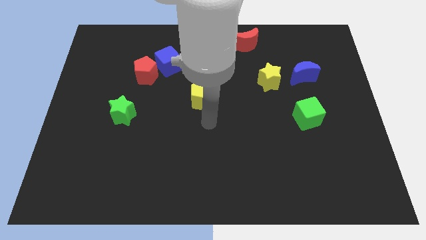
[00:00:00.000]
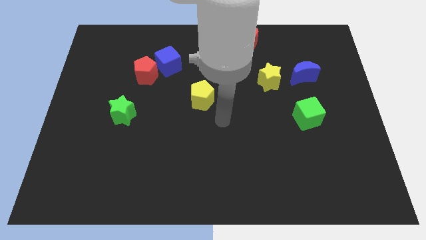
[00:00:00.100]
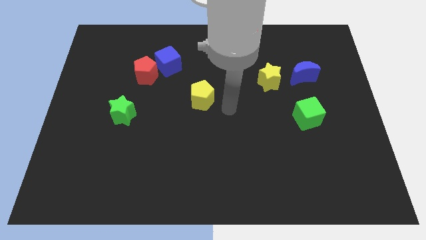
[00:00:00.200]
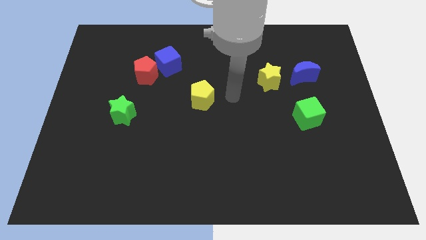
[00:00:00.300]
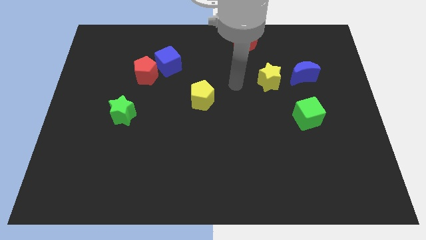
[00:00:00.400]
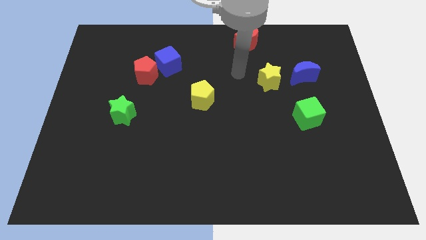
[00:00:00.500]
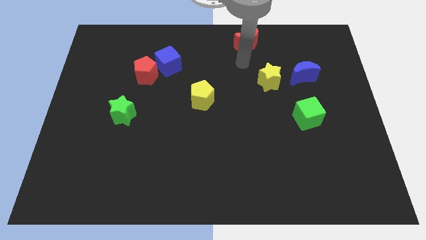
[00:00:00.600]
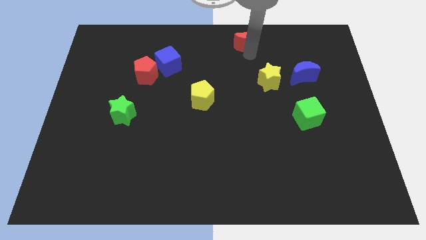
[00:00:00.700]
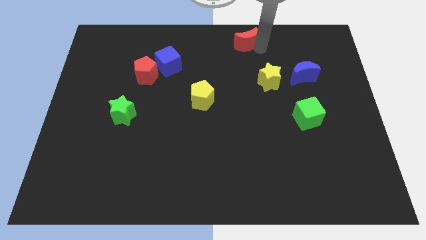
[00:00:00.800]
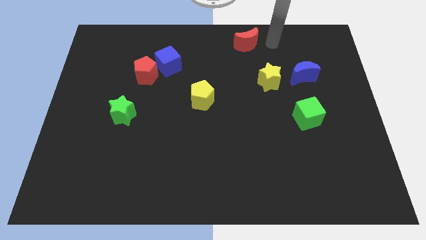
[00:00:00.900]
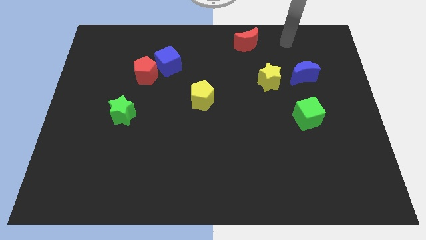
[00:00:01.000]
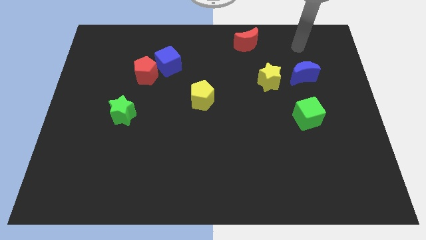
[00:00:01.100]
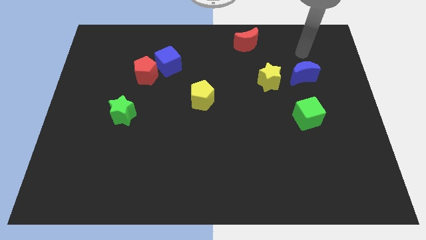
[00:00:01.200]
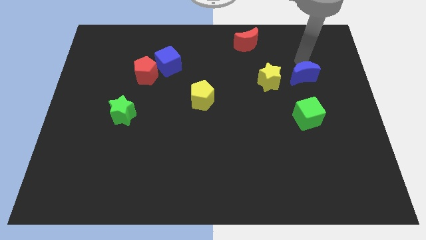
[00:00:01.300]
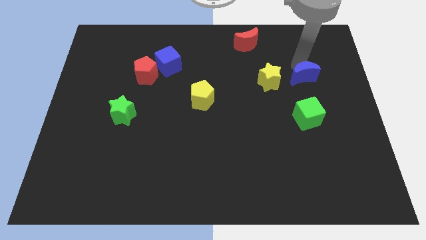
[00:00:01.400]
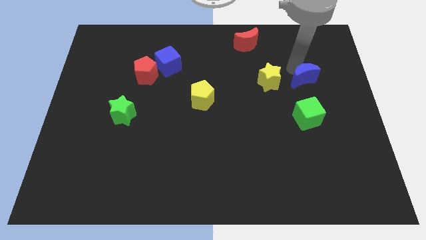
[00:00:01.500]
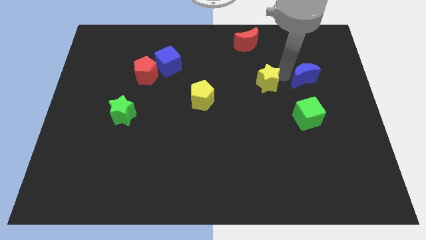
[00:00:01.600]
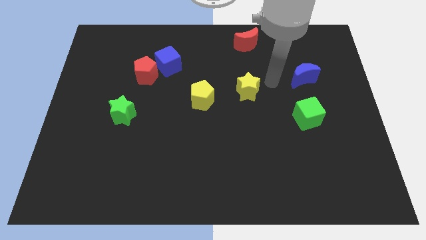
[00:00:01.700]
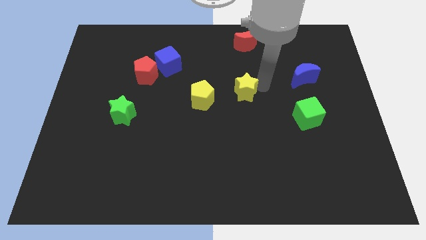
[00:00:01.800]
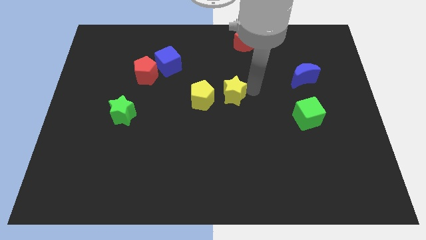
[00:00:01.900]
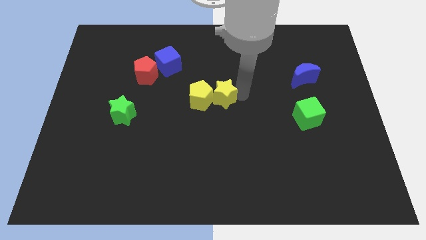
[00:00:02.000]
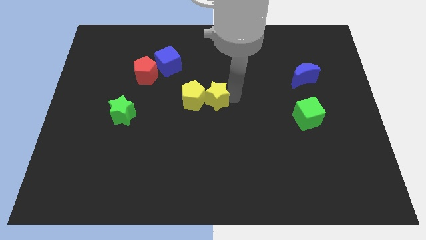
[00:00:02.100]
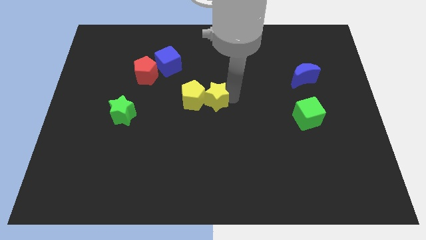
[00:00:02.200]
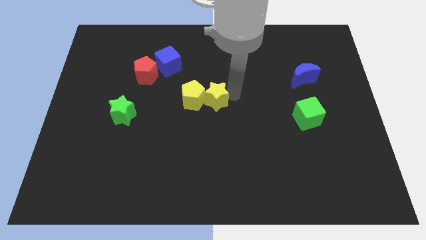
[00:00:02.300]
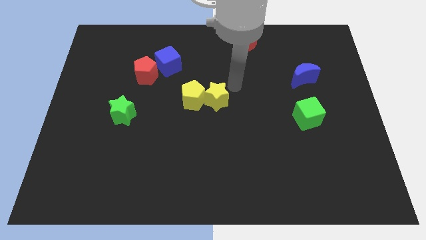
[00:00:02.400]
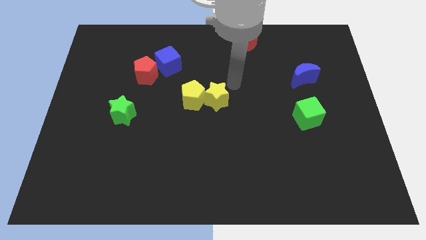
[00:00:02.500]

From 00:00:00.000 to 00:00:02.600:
push the yellow star into the right side of the yellow pentagon

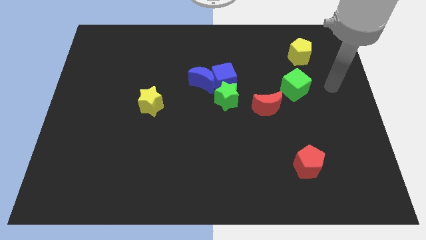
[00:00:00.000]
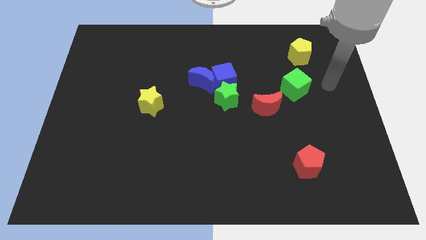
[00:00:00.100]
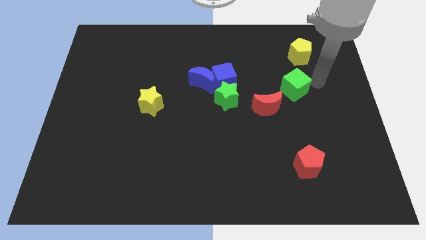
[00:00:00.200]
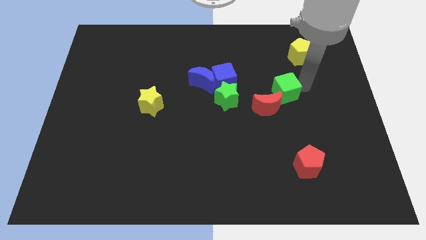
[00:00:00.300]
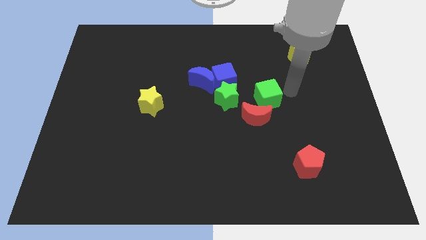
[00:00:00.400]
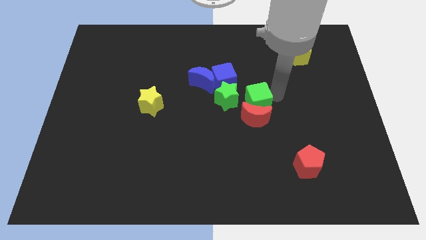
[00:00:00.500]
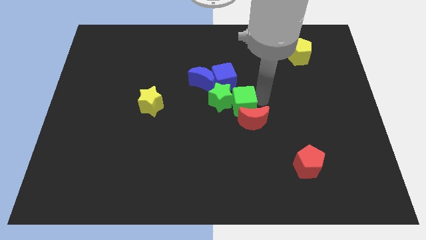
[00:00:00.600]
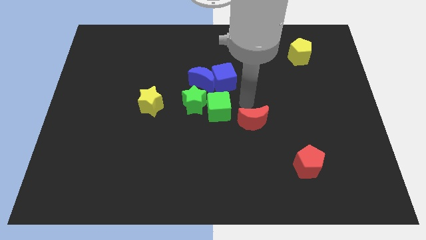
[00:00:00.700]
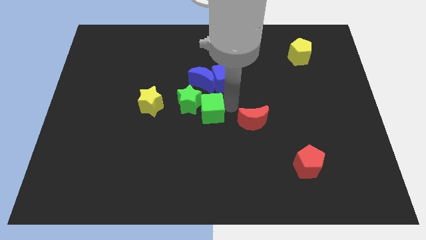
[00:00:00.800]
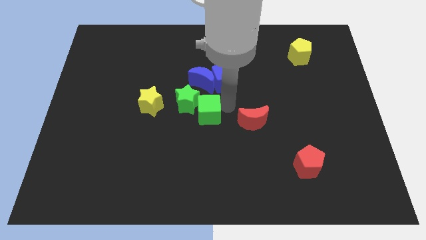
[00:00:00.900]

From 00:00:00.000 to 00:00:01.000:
move the green cube into the green star

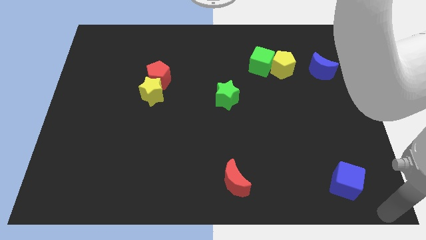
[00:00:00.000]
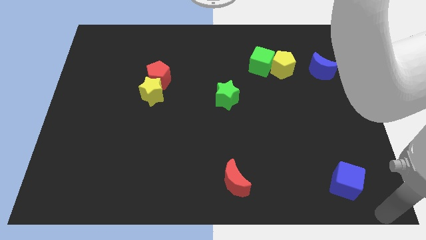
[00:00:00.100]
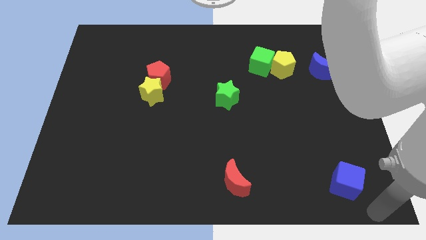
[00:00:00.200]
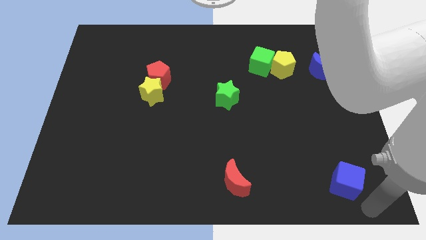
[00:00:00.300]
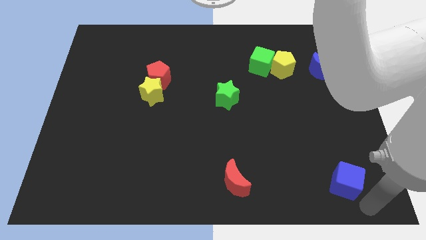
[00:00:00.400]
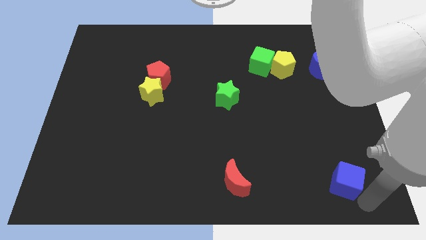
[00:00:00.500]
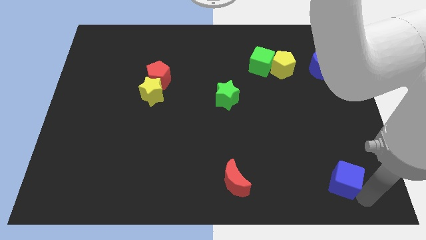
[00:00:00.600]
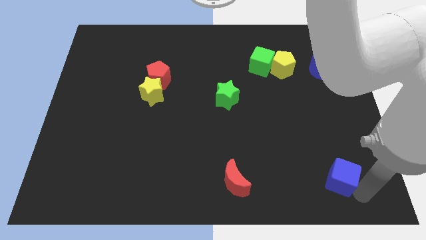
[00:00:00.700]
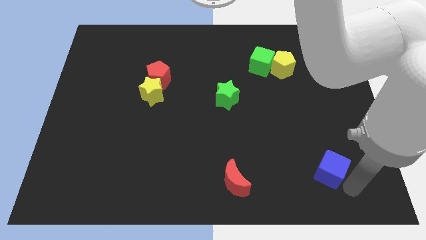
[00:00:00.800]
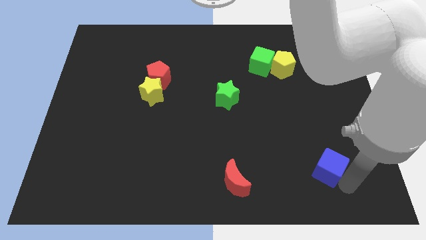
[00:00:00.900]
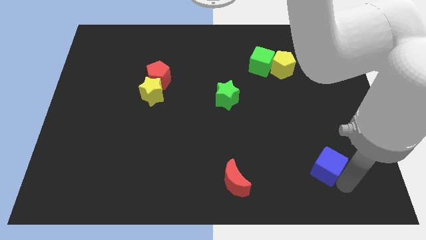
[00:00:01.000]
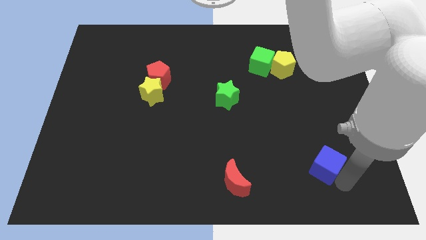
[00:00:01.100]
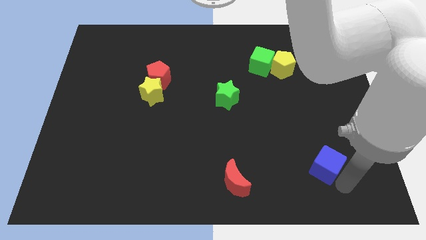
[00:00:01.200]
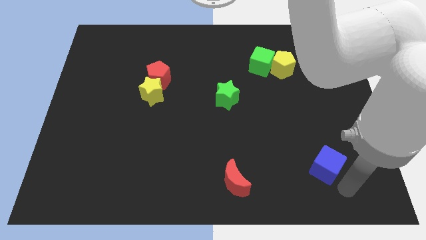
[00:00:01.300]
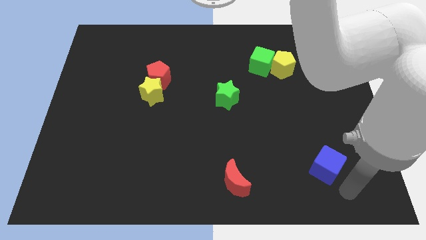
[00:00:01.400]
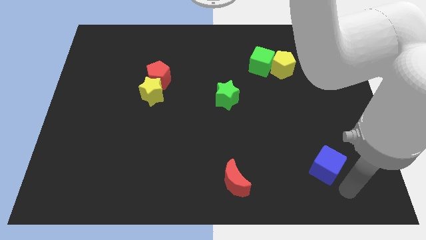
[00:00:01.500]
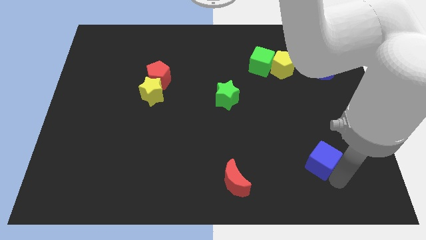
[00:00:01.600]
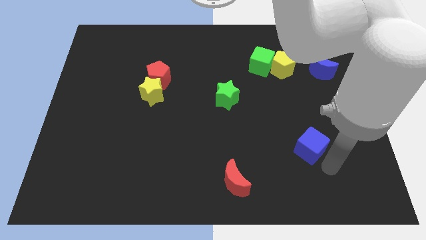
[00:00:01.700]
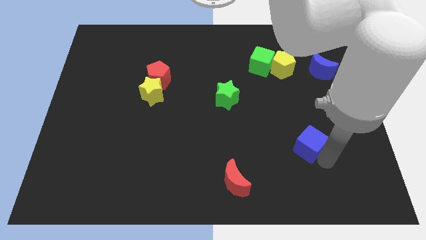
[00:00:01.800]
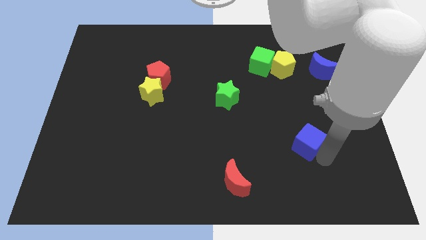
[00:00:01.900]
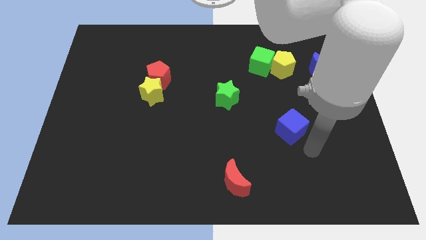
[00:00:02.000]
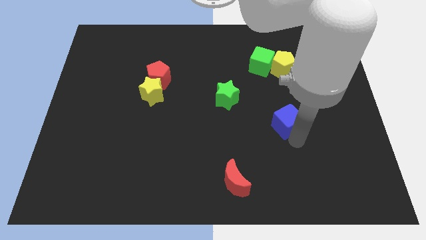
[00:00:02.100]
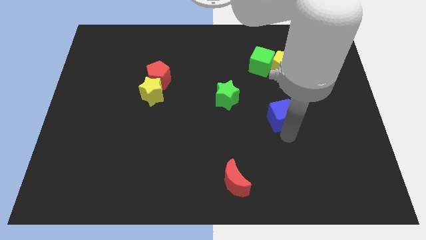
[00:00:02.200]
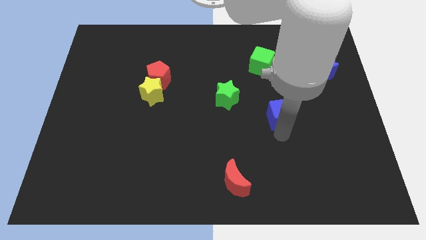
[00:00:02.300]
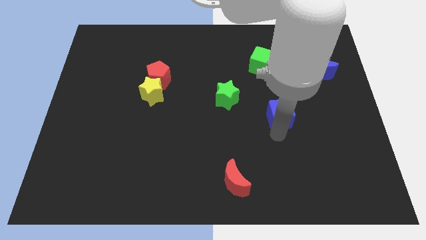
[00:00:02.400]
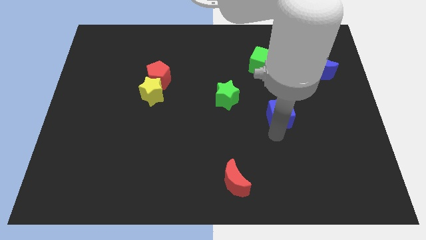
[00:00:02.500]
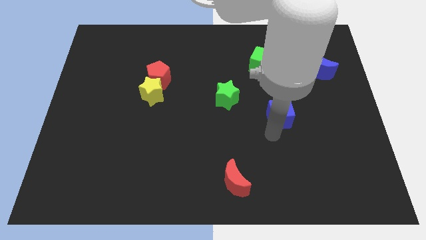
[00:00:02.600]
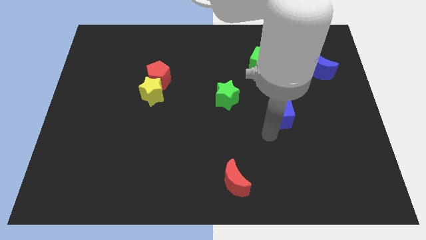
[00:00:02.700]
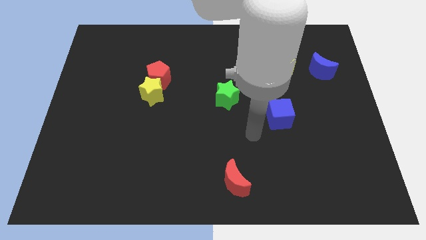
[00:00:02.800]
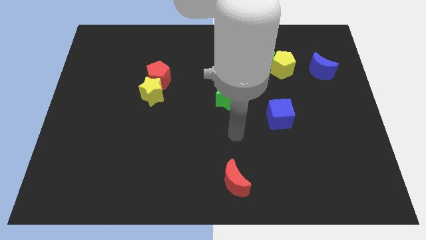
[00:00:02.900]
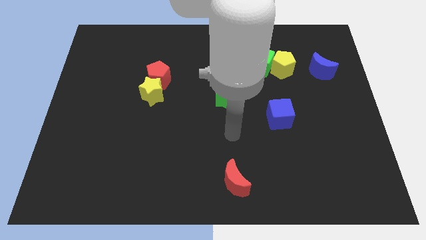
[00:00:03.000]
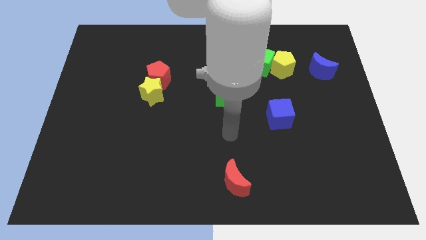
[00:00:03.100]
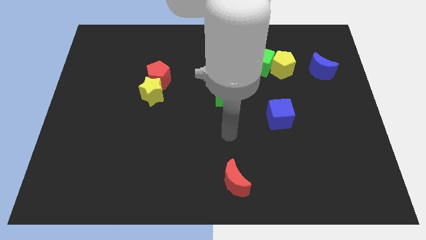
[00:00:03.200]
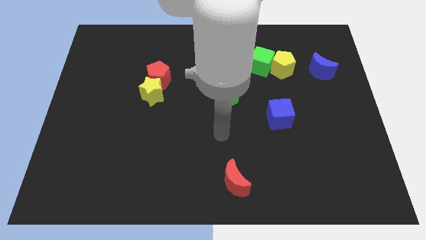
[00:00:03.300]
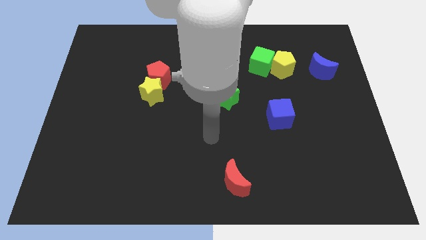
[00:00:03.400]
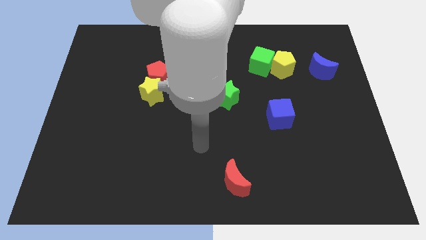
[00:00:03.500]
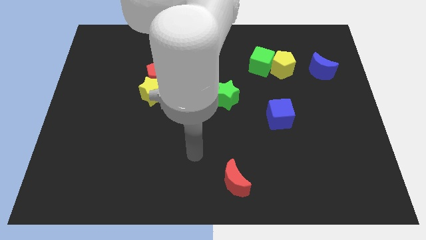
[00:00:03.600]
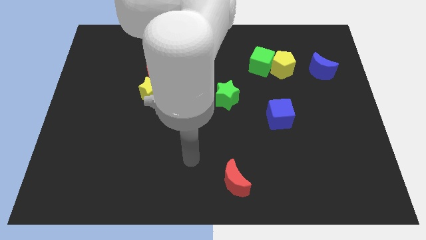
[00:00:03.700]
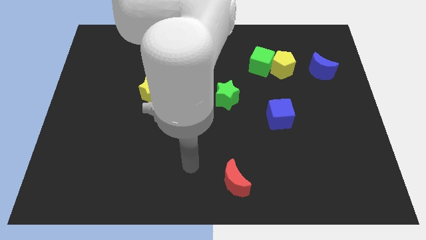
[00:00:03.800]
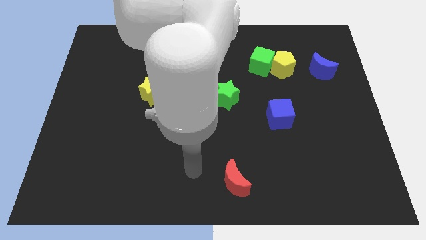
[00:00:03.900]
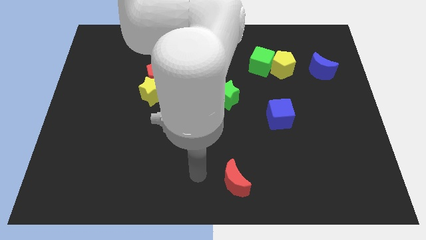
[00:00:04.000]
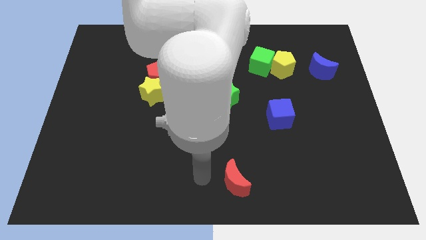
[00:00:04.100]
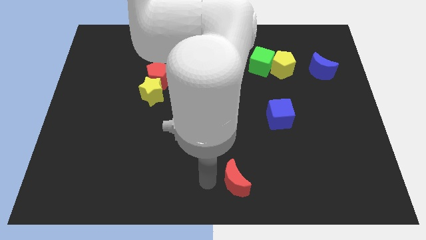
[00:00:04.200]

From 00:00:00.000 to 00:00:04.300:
move blue cube towards bottom of yellow pentagon

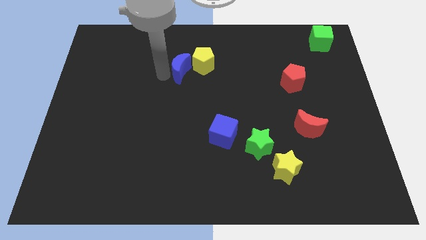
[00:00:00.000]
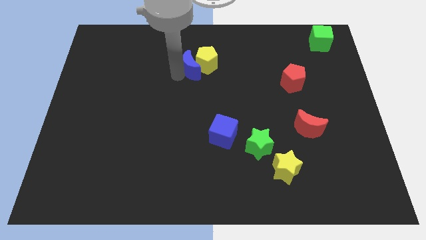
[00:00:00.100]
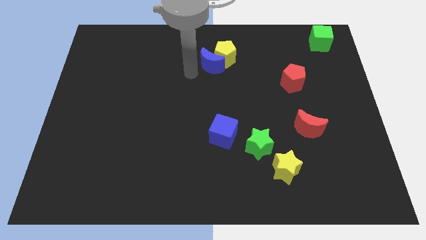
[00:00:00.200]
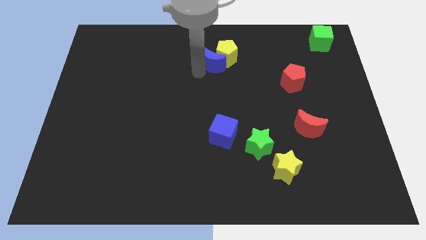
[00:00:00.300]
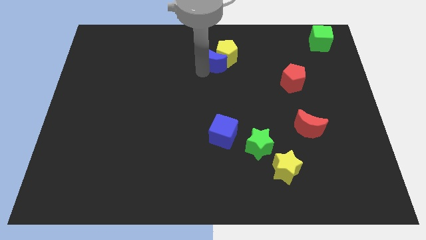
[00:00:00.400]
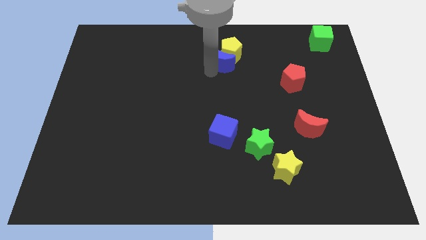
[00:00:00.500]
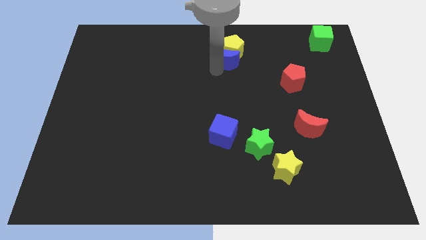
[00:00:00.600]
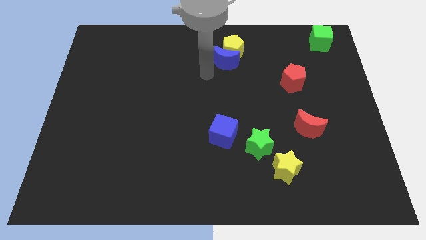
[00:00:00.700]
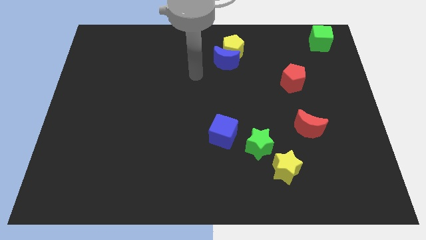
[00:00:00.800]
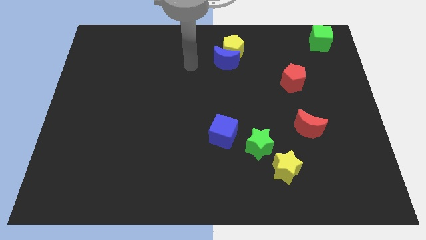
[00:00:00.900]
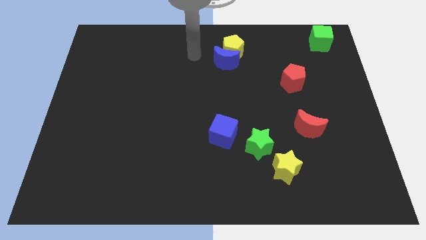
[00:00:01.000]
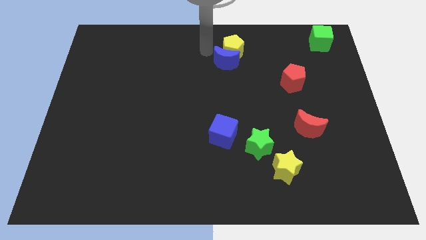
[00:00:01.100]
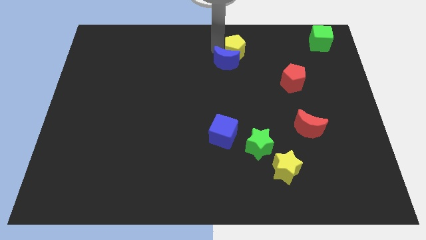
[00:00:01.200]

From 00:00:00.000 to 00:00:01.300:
push the yellow pentagon and blue moon to the center top
